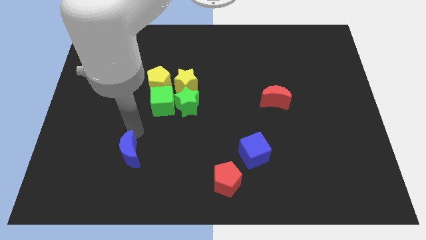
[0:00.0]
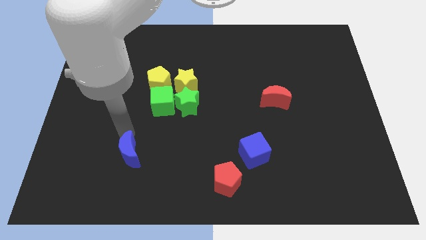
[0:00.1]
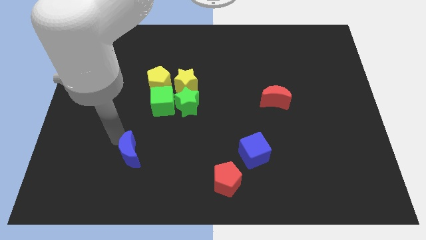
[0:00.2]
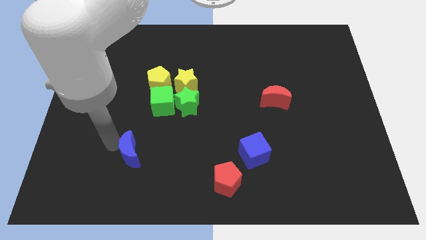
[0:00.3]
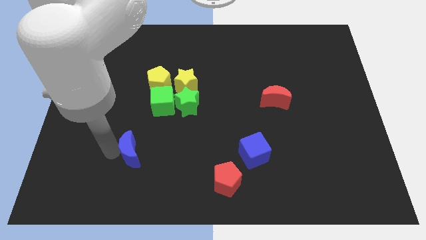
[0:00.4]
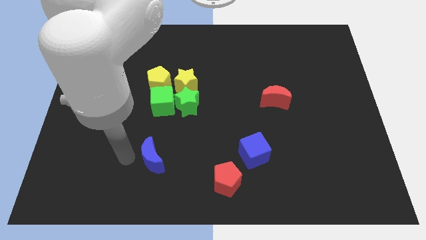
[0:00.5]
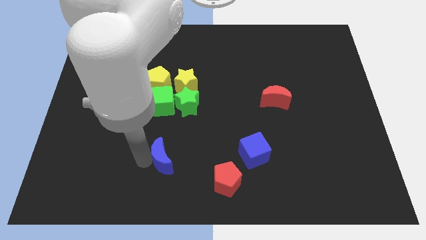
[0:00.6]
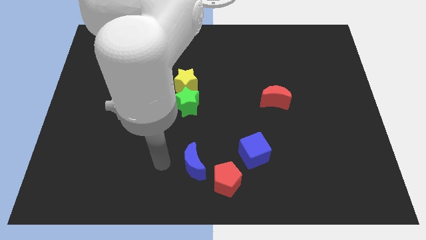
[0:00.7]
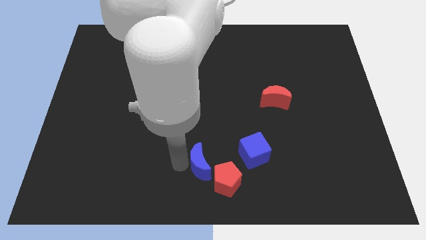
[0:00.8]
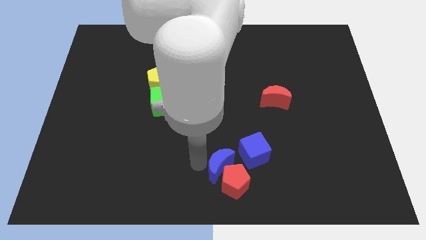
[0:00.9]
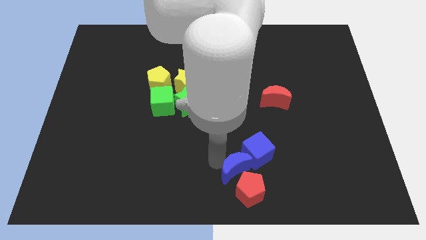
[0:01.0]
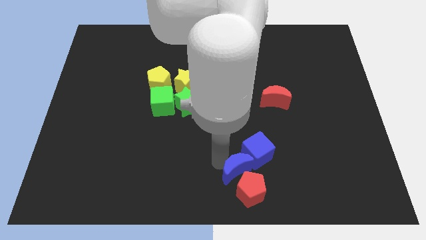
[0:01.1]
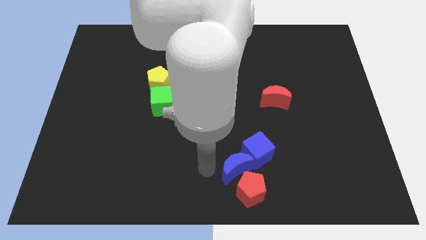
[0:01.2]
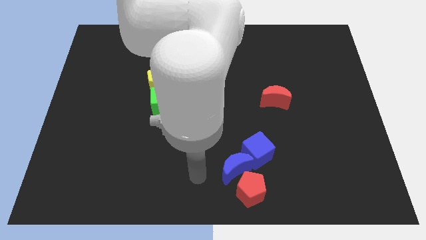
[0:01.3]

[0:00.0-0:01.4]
move the blue block to push blue cube and red pentagon

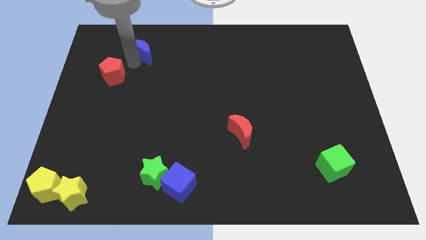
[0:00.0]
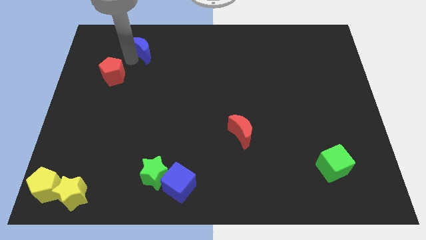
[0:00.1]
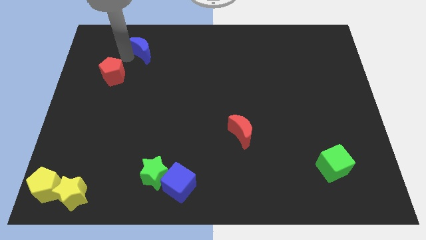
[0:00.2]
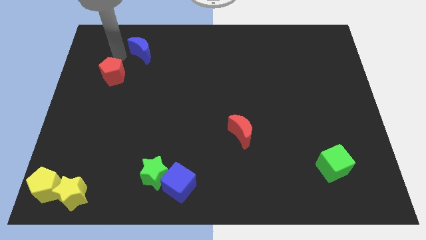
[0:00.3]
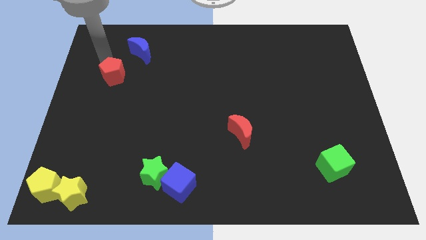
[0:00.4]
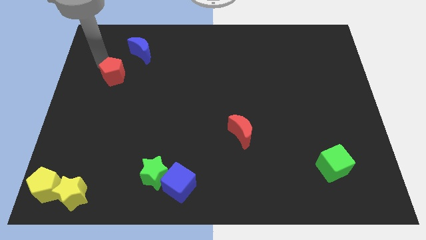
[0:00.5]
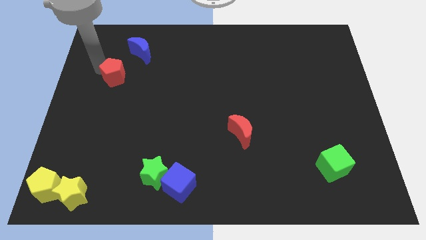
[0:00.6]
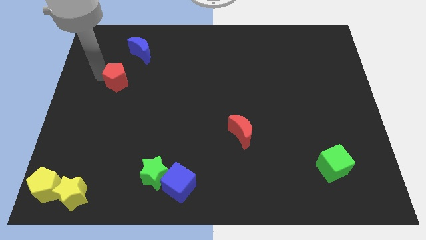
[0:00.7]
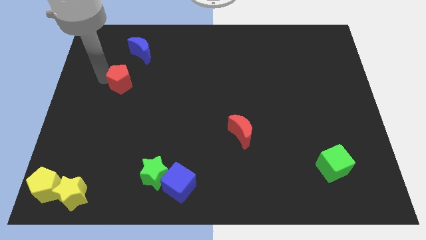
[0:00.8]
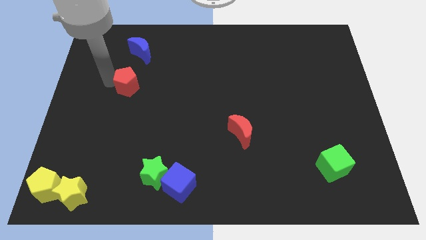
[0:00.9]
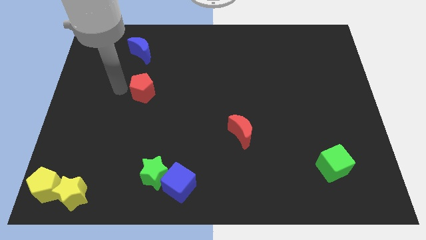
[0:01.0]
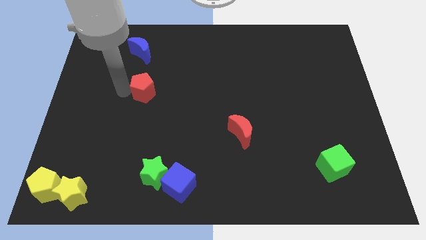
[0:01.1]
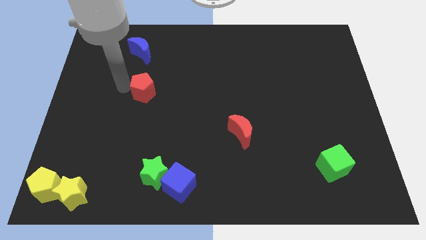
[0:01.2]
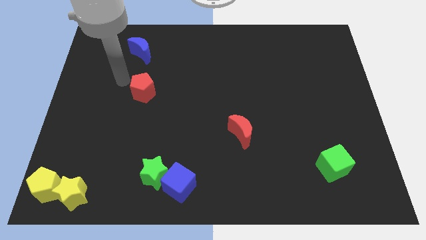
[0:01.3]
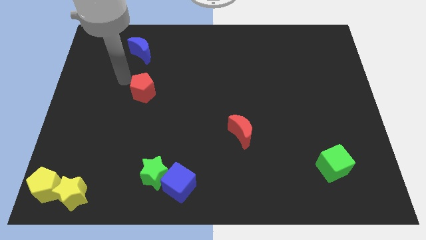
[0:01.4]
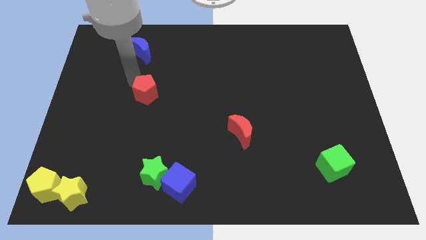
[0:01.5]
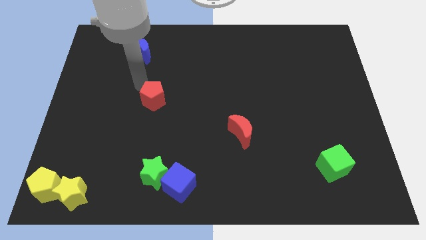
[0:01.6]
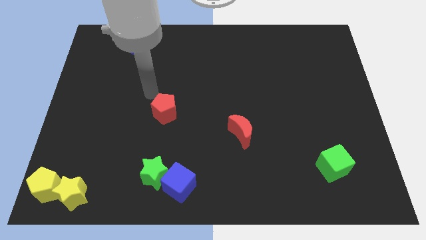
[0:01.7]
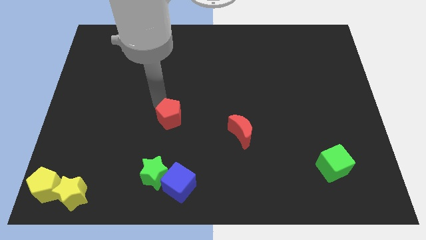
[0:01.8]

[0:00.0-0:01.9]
push the red pentagon above the green star

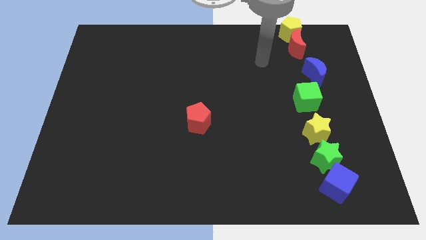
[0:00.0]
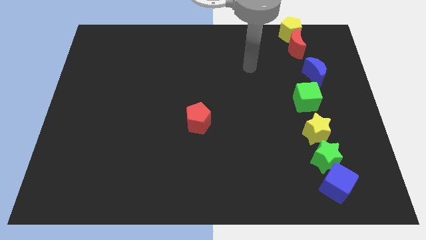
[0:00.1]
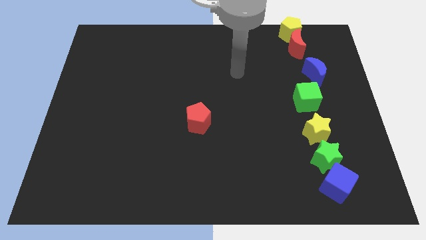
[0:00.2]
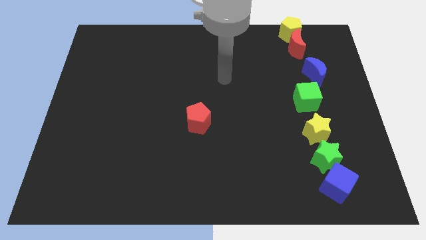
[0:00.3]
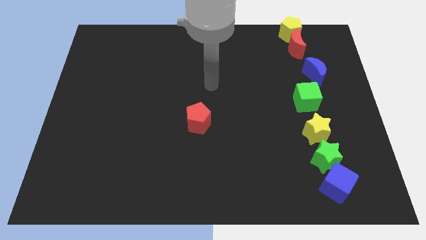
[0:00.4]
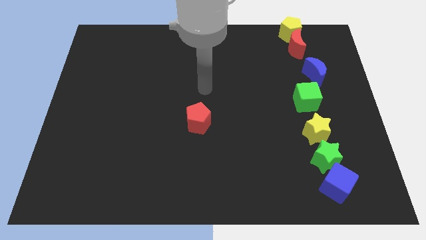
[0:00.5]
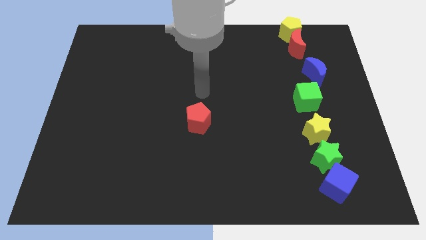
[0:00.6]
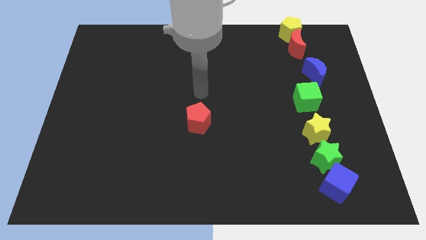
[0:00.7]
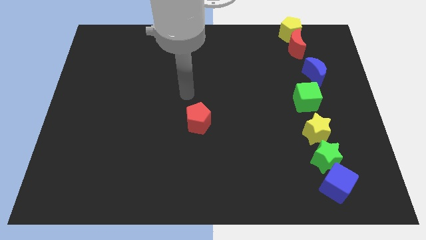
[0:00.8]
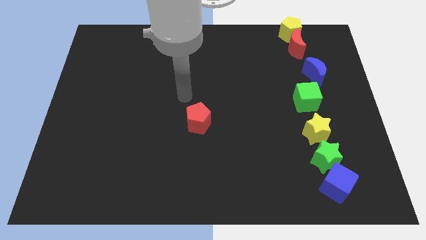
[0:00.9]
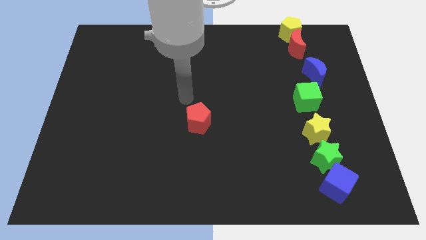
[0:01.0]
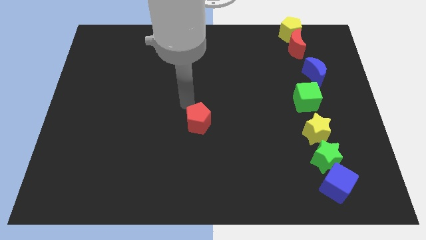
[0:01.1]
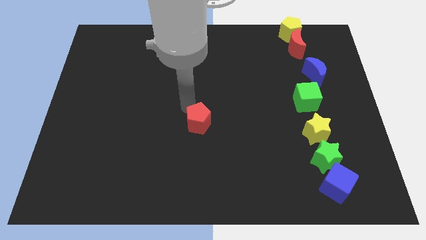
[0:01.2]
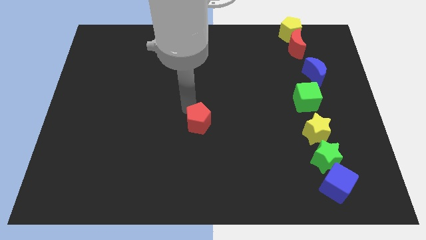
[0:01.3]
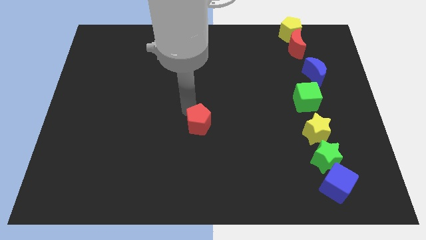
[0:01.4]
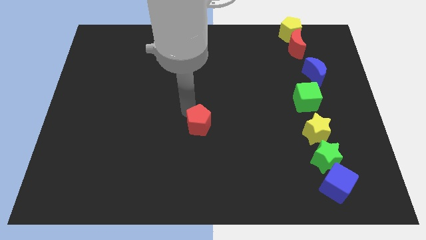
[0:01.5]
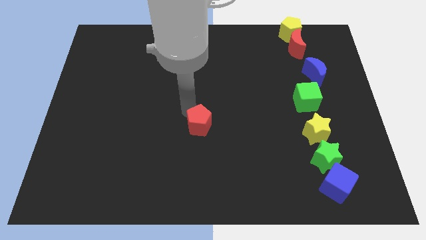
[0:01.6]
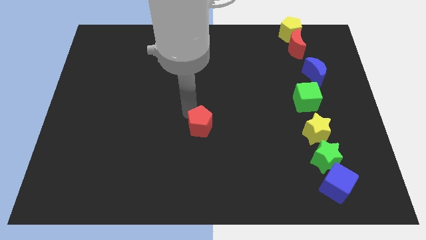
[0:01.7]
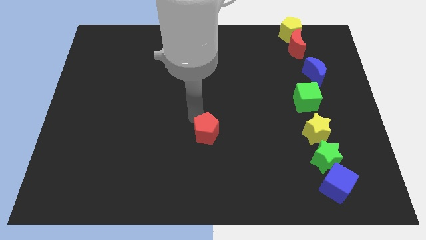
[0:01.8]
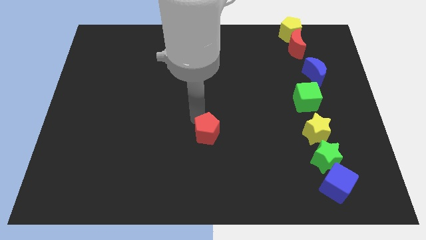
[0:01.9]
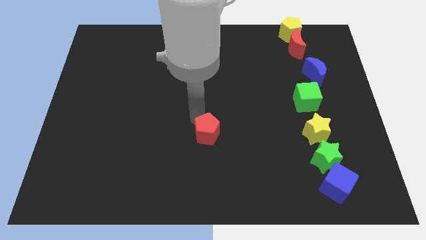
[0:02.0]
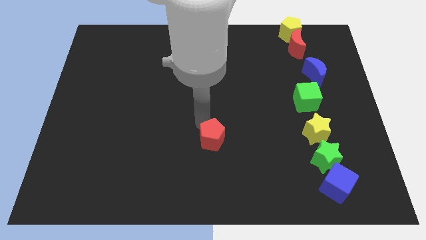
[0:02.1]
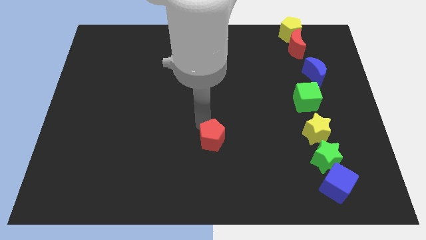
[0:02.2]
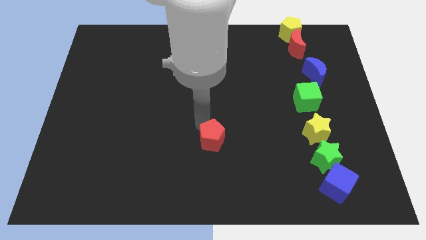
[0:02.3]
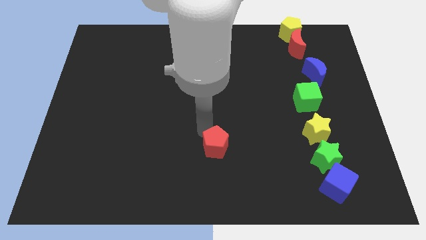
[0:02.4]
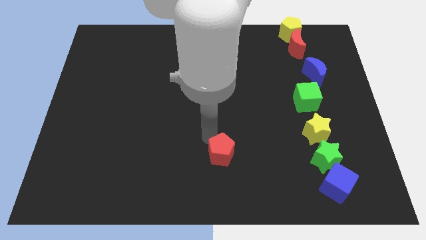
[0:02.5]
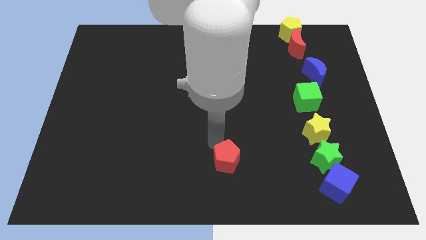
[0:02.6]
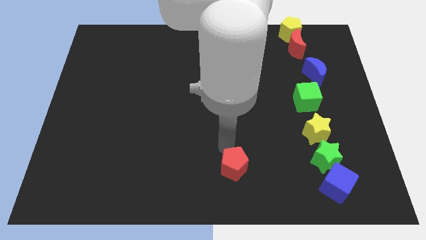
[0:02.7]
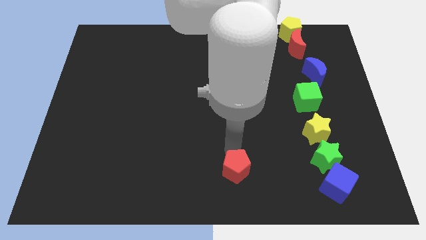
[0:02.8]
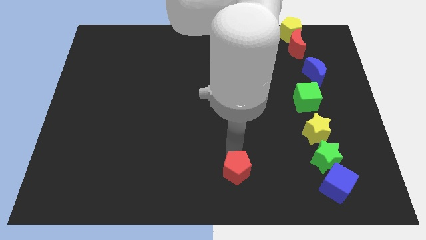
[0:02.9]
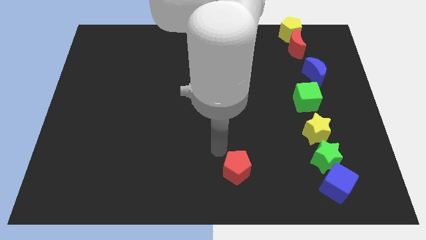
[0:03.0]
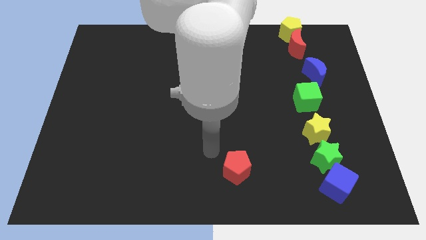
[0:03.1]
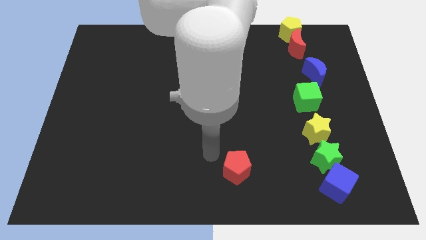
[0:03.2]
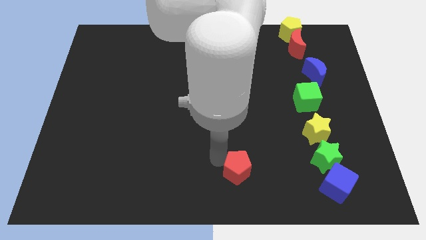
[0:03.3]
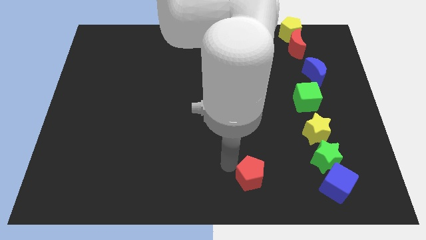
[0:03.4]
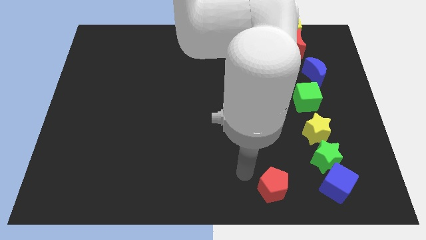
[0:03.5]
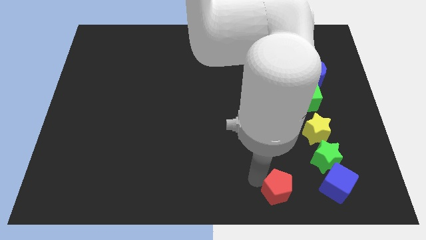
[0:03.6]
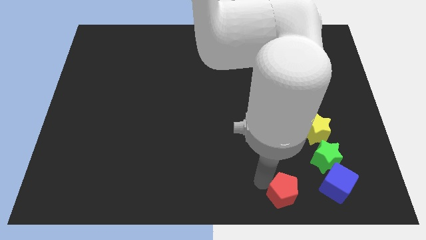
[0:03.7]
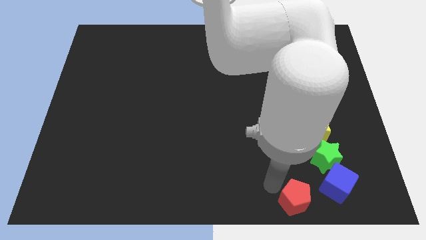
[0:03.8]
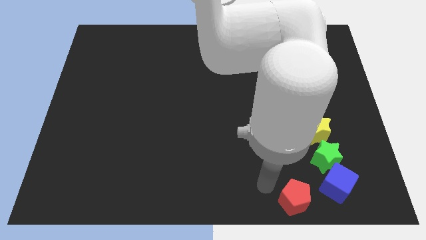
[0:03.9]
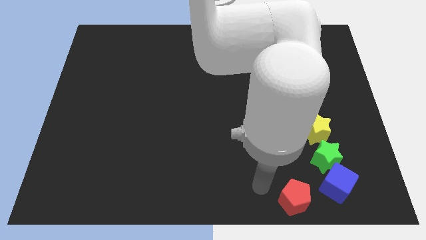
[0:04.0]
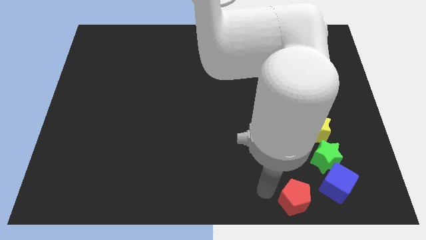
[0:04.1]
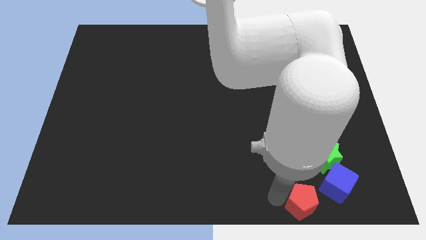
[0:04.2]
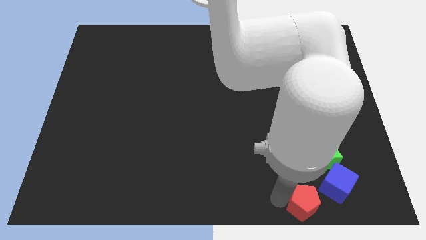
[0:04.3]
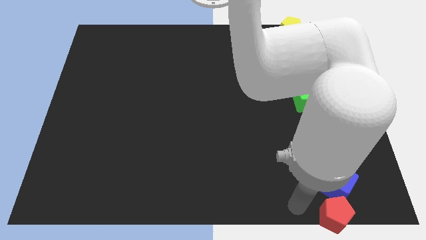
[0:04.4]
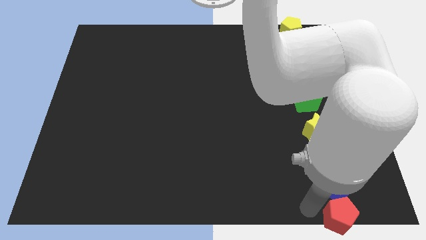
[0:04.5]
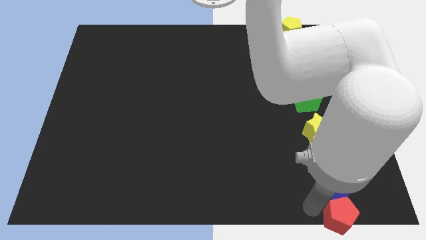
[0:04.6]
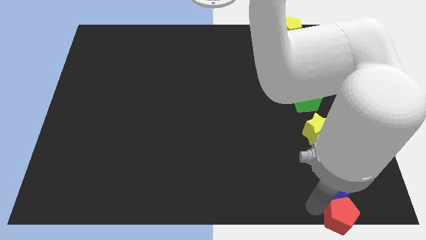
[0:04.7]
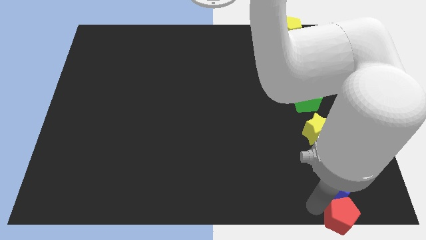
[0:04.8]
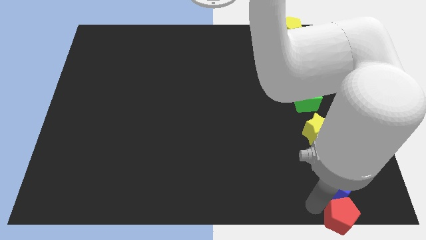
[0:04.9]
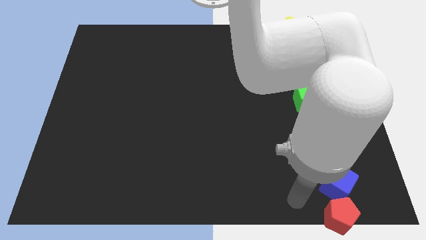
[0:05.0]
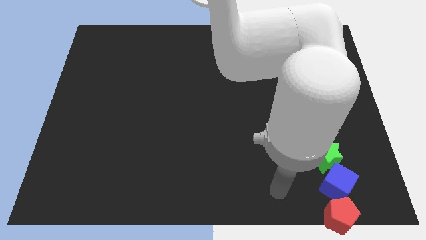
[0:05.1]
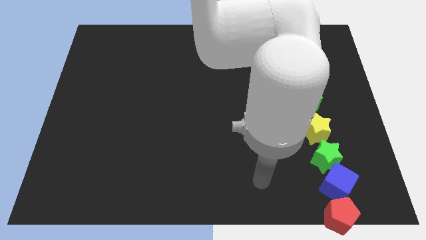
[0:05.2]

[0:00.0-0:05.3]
slide the red pentagon to the bottom side of the blue cube

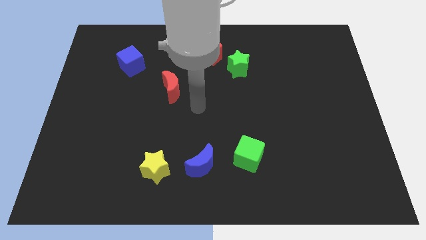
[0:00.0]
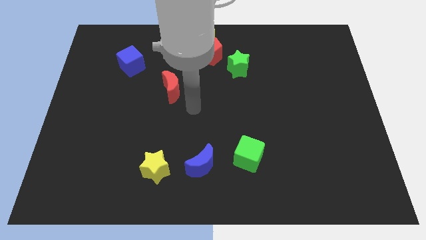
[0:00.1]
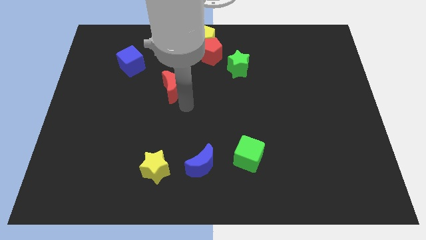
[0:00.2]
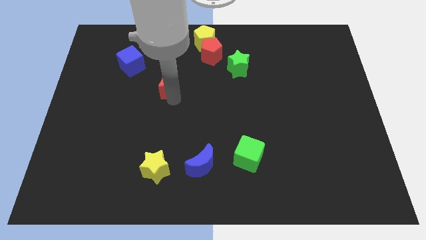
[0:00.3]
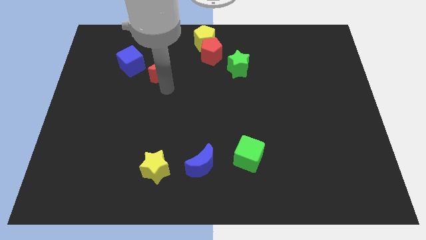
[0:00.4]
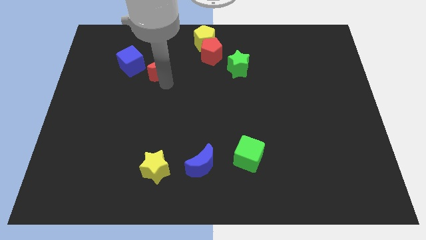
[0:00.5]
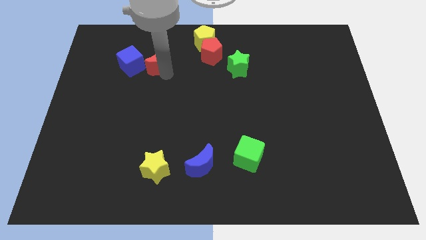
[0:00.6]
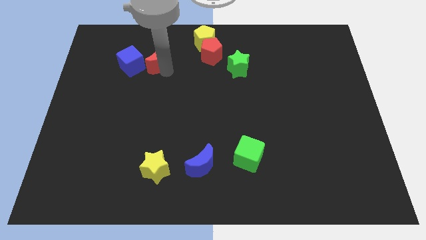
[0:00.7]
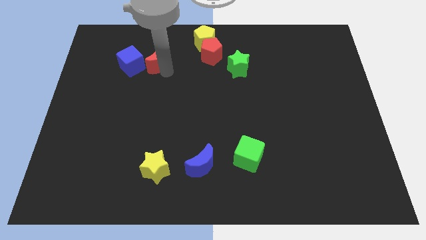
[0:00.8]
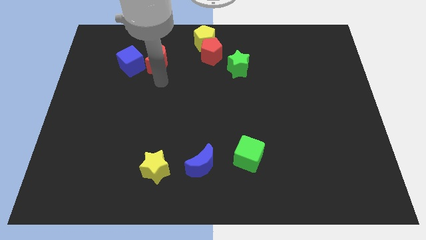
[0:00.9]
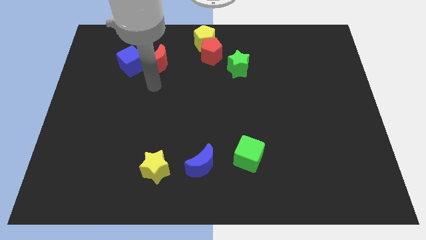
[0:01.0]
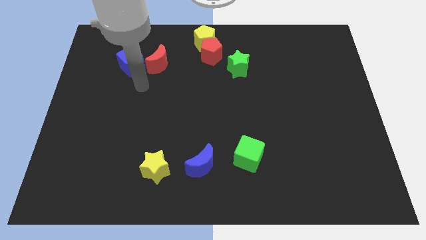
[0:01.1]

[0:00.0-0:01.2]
slide the red crescent slightly towards the blue cube
